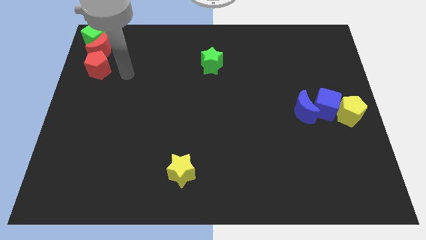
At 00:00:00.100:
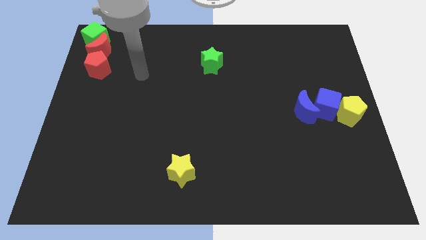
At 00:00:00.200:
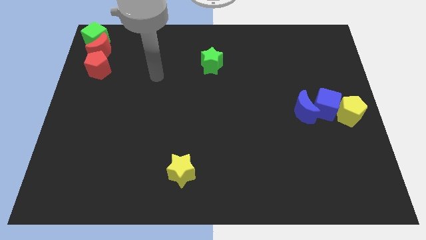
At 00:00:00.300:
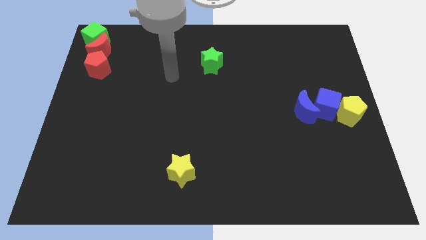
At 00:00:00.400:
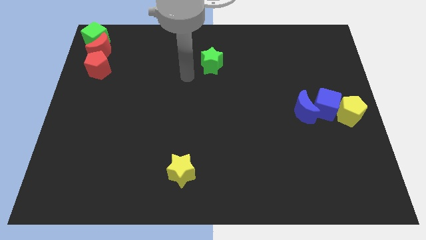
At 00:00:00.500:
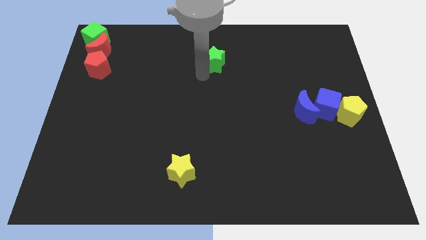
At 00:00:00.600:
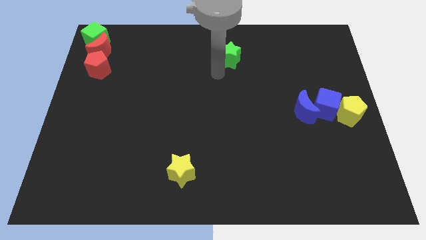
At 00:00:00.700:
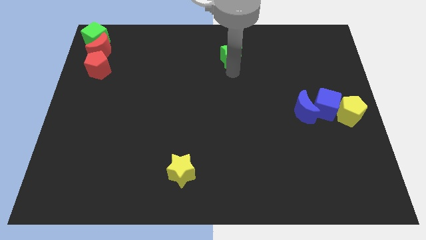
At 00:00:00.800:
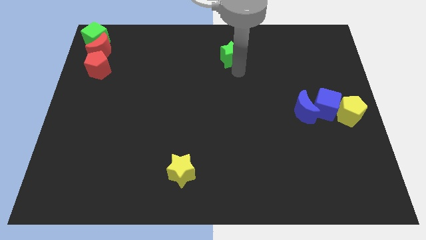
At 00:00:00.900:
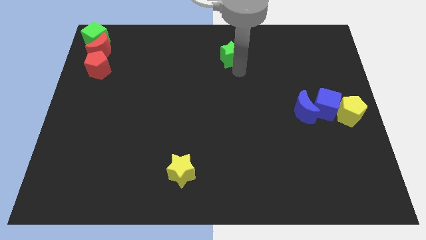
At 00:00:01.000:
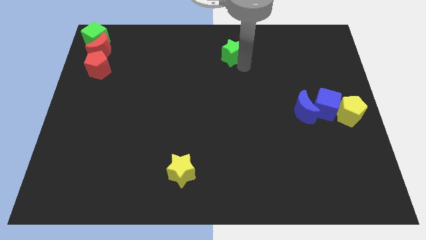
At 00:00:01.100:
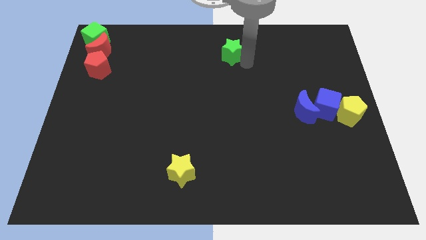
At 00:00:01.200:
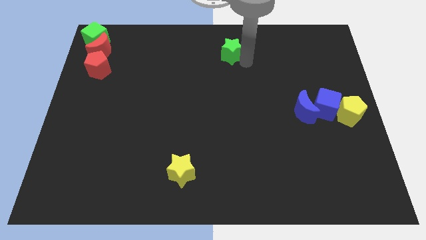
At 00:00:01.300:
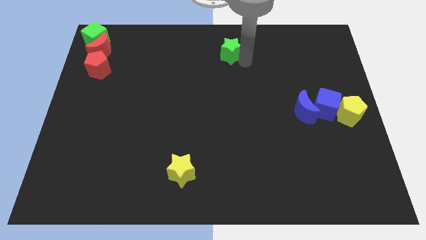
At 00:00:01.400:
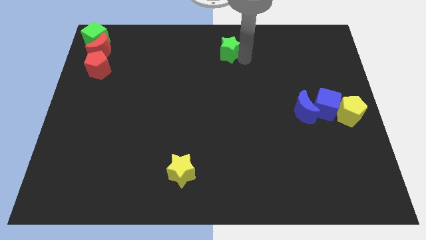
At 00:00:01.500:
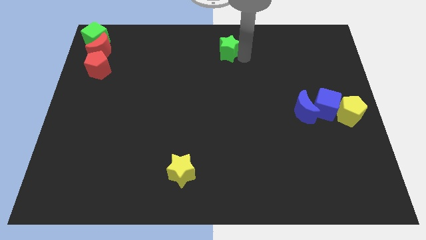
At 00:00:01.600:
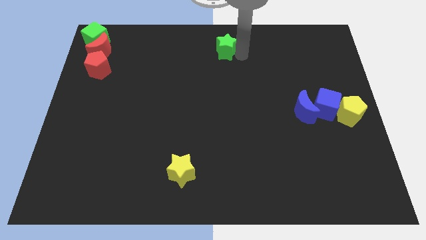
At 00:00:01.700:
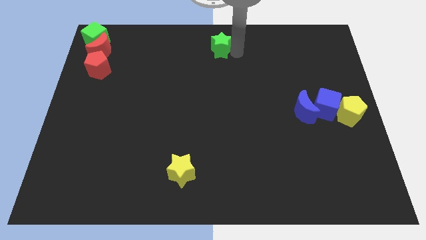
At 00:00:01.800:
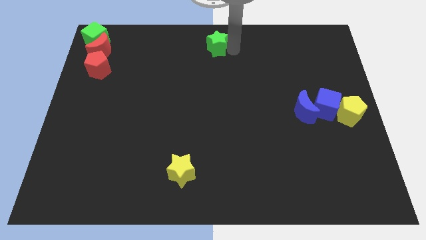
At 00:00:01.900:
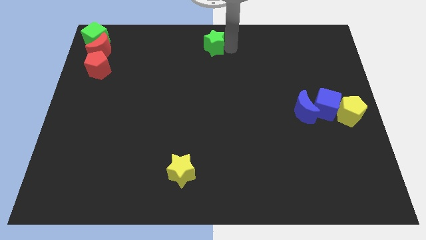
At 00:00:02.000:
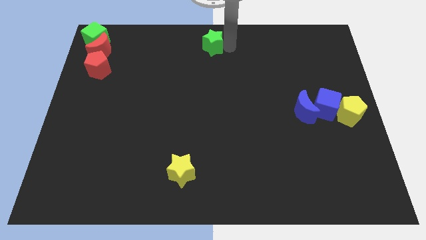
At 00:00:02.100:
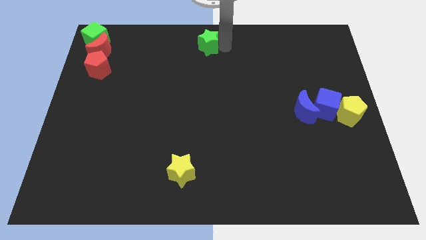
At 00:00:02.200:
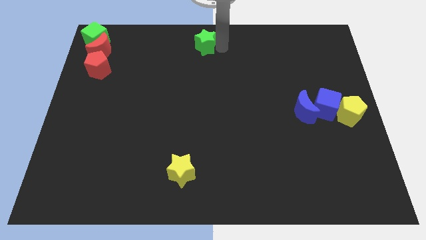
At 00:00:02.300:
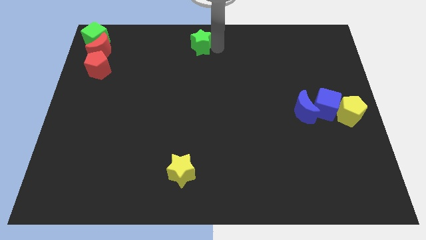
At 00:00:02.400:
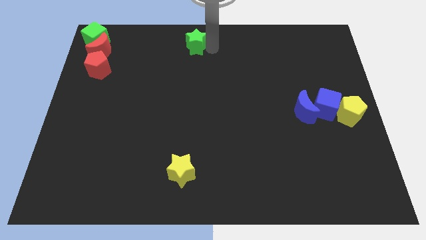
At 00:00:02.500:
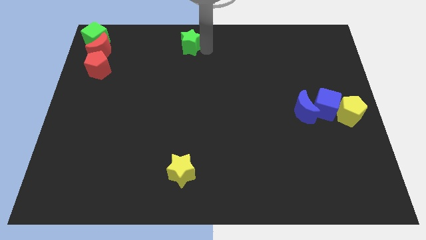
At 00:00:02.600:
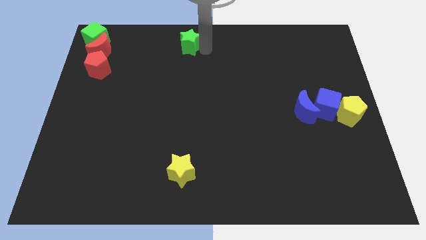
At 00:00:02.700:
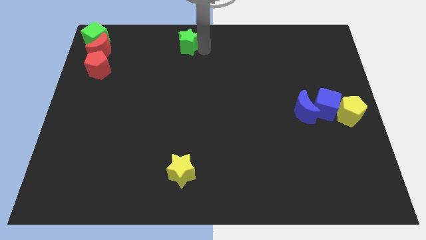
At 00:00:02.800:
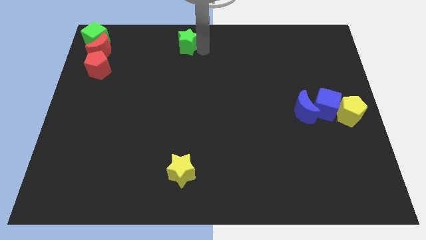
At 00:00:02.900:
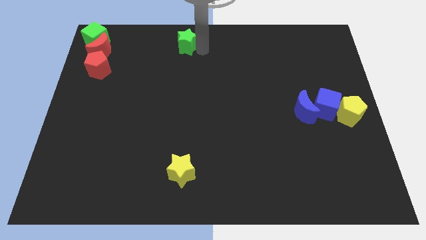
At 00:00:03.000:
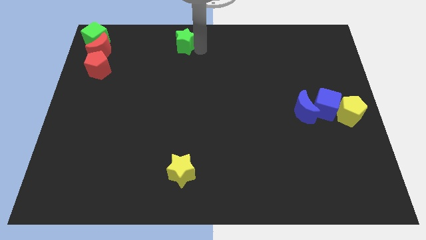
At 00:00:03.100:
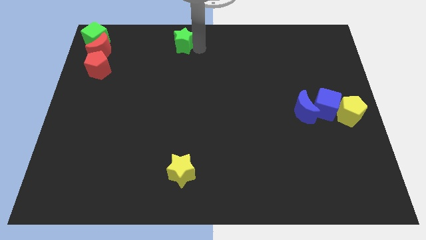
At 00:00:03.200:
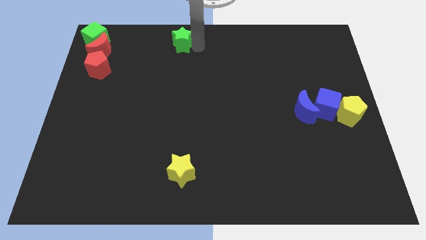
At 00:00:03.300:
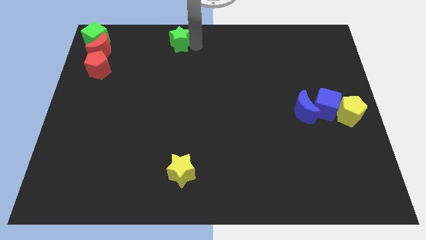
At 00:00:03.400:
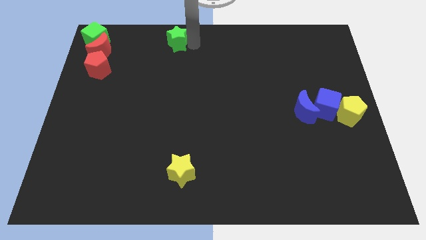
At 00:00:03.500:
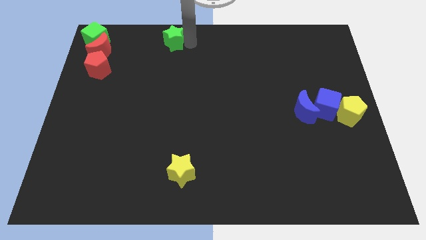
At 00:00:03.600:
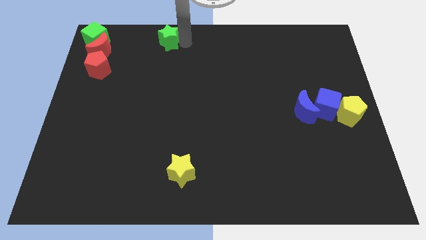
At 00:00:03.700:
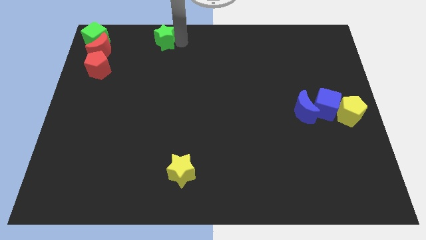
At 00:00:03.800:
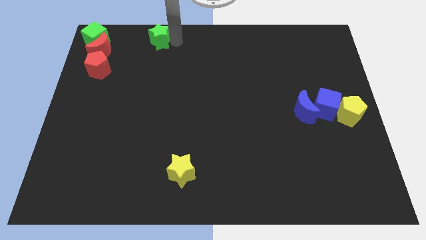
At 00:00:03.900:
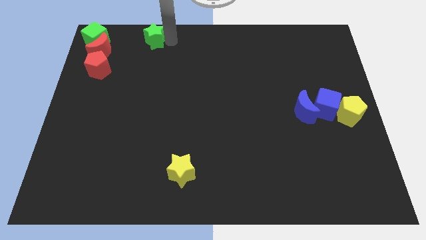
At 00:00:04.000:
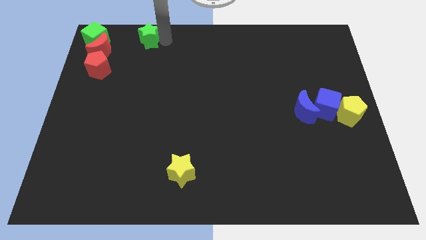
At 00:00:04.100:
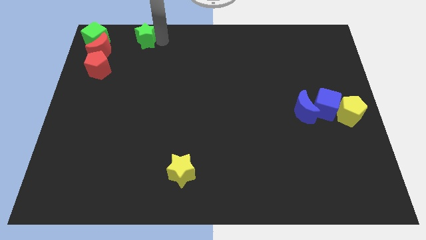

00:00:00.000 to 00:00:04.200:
push the green star to the right side of green cube

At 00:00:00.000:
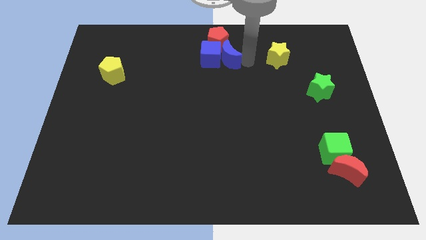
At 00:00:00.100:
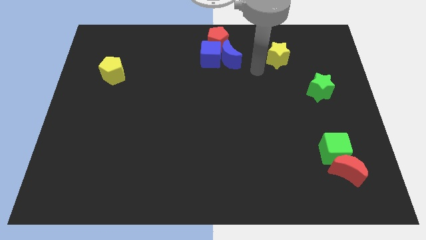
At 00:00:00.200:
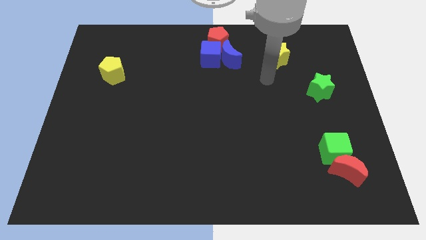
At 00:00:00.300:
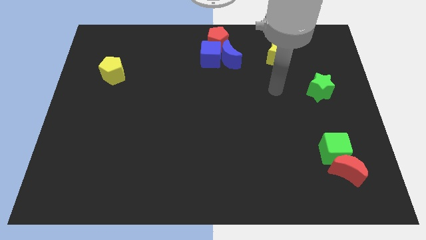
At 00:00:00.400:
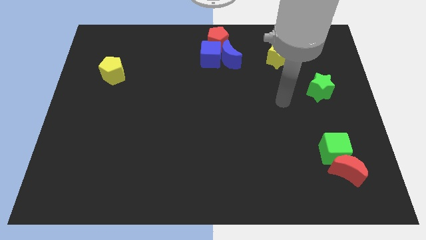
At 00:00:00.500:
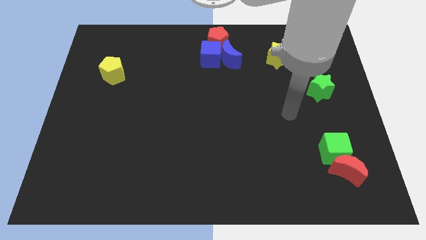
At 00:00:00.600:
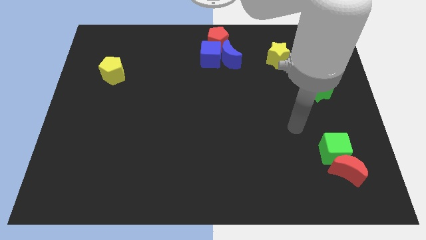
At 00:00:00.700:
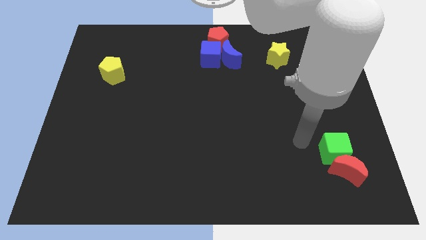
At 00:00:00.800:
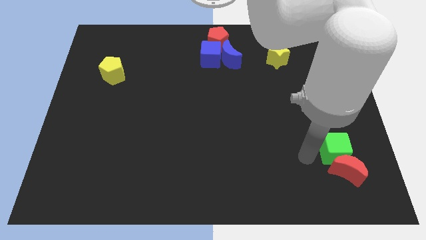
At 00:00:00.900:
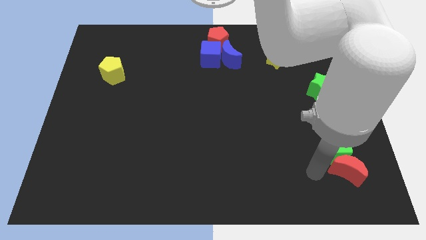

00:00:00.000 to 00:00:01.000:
move your arm to the left of the red moon

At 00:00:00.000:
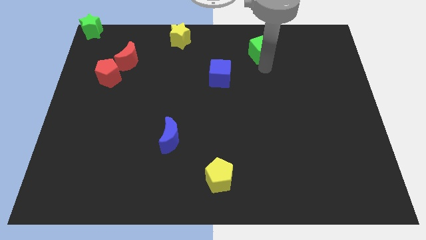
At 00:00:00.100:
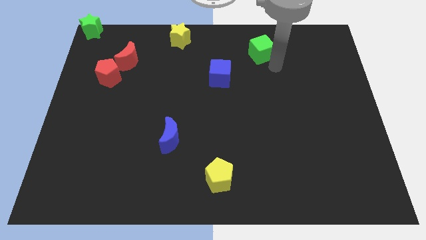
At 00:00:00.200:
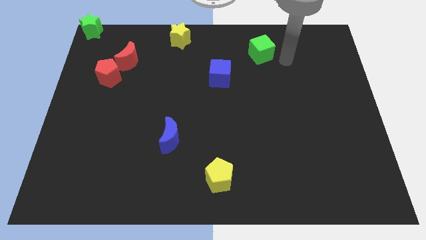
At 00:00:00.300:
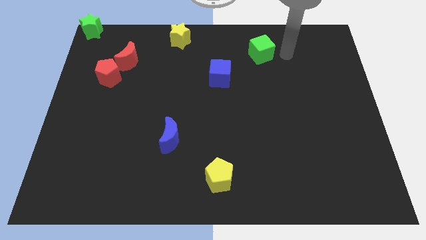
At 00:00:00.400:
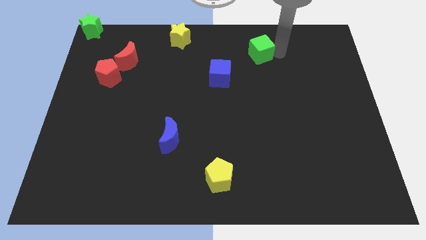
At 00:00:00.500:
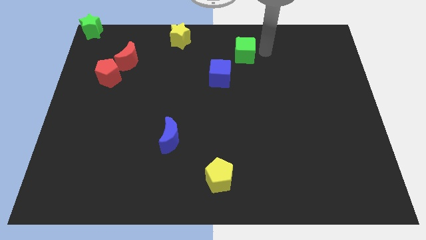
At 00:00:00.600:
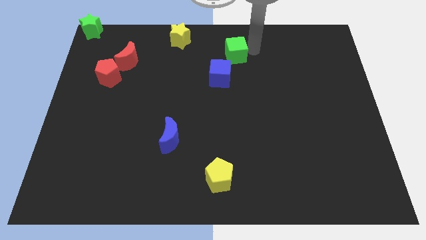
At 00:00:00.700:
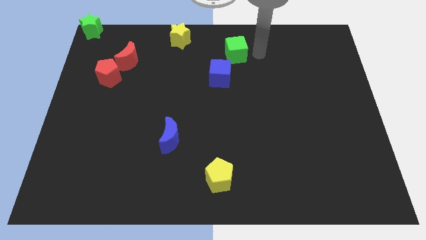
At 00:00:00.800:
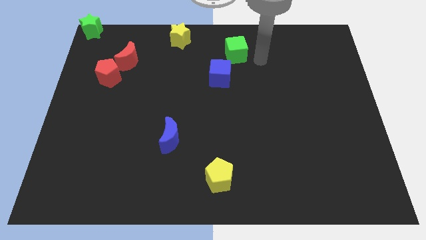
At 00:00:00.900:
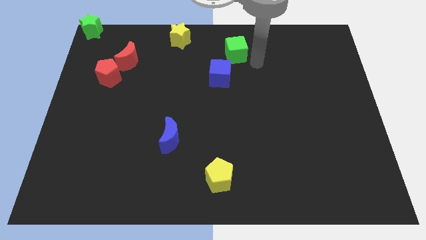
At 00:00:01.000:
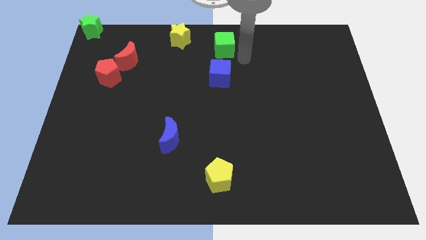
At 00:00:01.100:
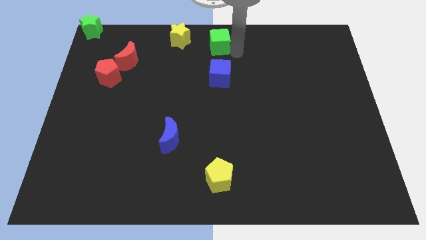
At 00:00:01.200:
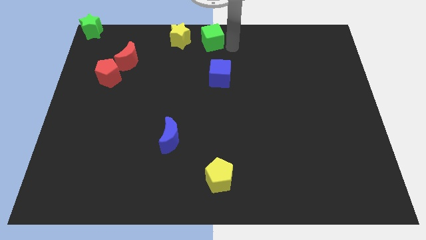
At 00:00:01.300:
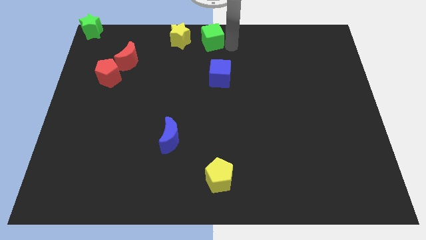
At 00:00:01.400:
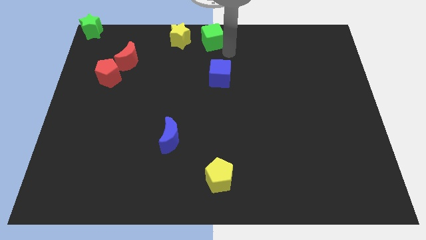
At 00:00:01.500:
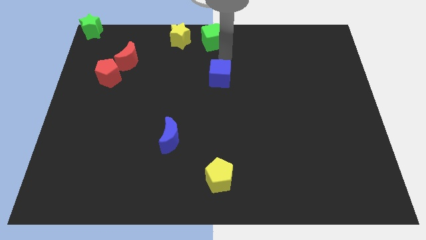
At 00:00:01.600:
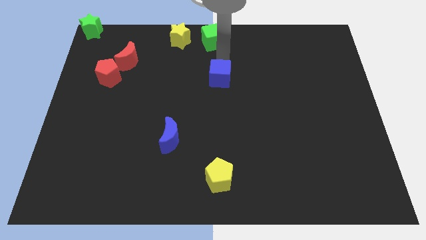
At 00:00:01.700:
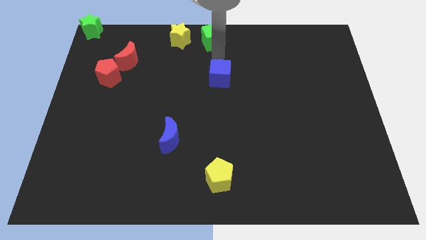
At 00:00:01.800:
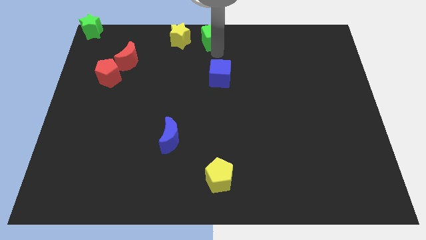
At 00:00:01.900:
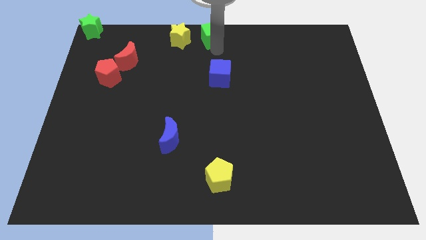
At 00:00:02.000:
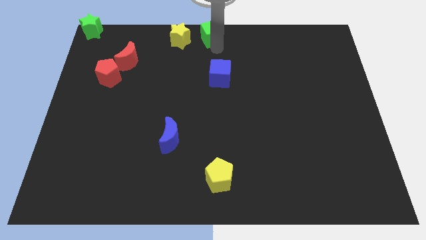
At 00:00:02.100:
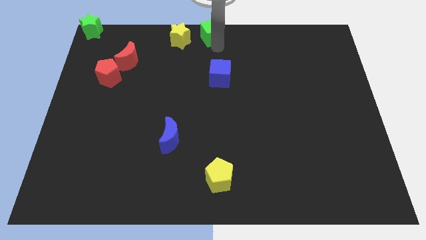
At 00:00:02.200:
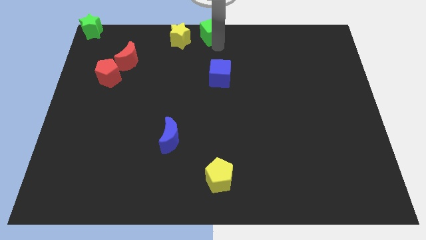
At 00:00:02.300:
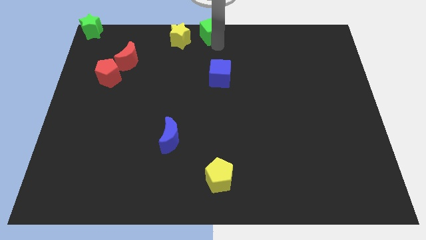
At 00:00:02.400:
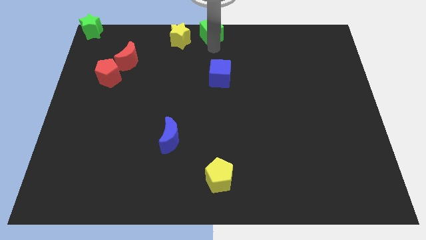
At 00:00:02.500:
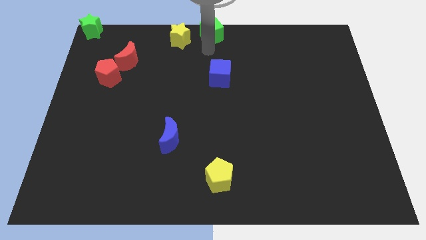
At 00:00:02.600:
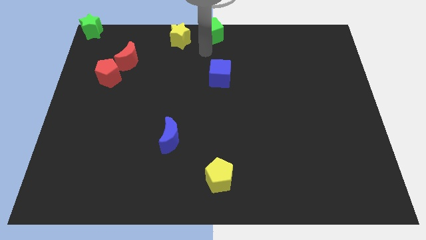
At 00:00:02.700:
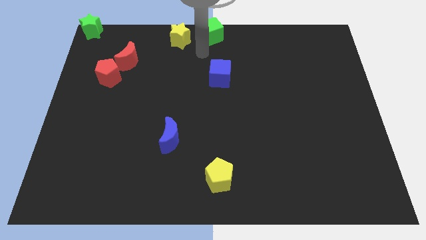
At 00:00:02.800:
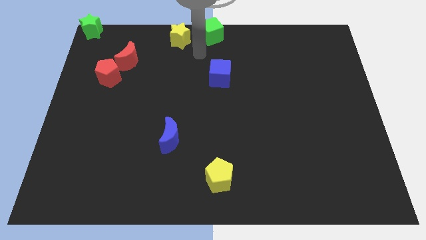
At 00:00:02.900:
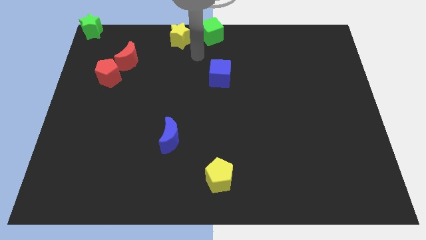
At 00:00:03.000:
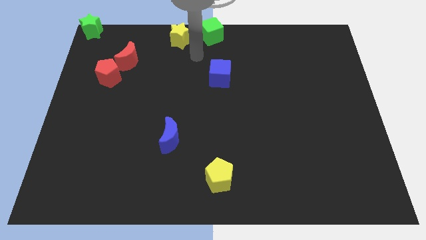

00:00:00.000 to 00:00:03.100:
slide the green cube to the right of yellow star

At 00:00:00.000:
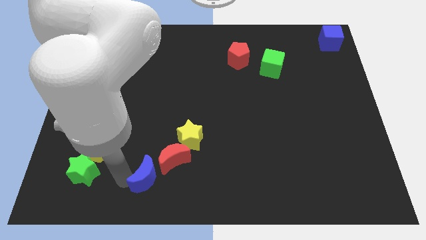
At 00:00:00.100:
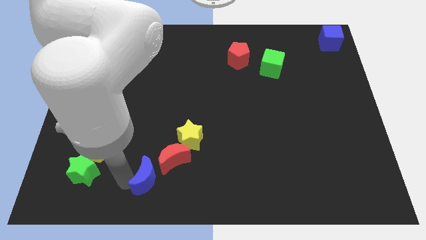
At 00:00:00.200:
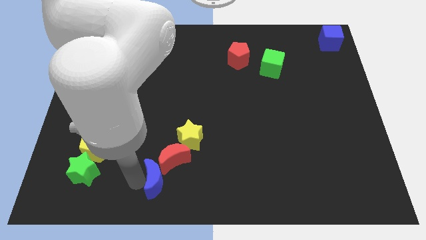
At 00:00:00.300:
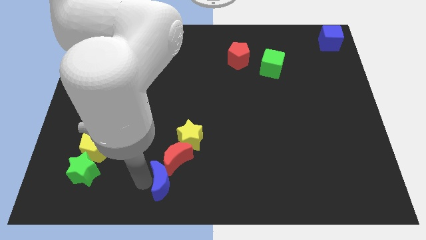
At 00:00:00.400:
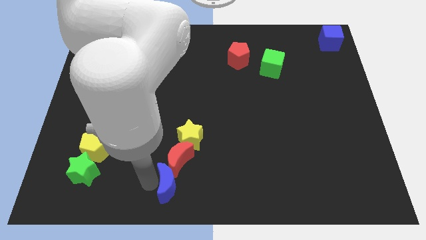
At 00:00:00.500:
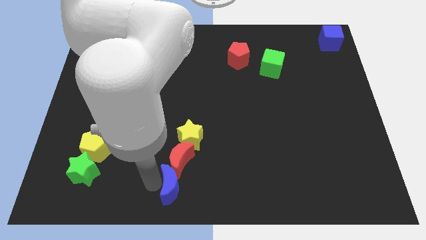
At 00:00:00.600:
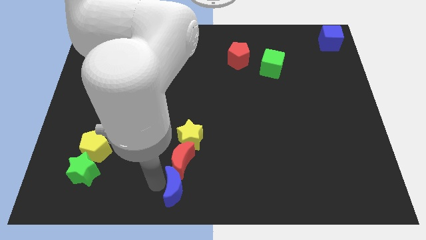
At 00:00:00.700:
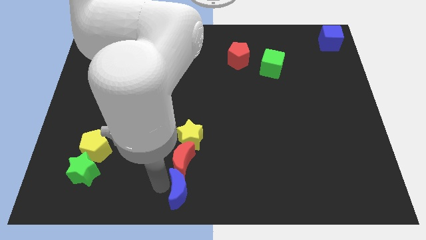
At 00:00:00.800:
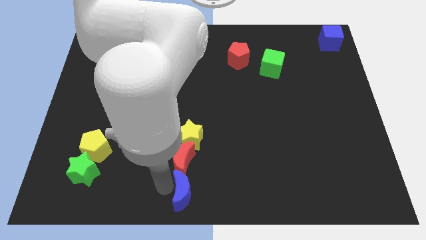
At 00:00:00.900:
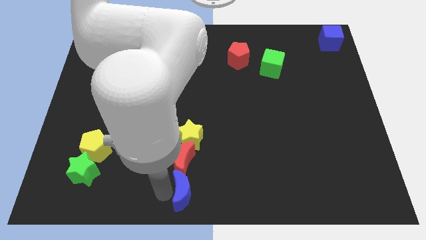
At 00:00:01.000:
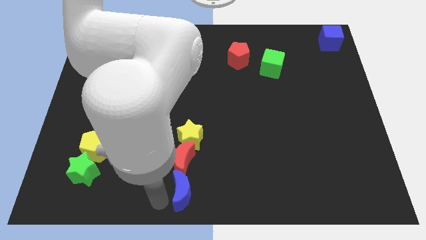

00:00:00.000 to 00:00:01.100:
place blue moon below red moon
